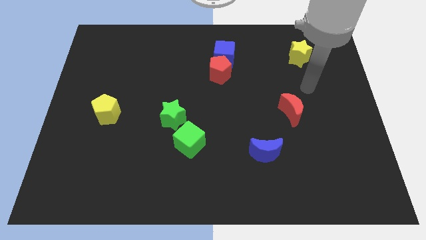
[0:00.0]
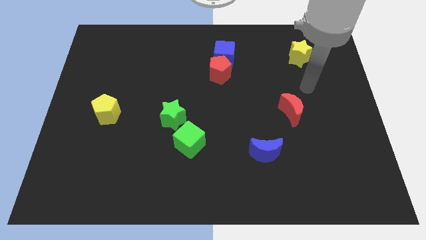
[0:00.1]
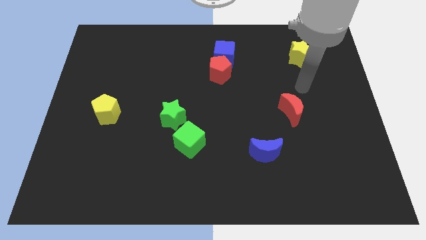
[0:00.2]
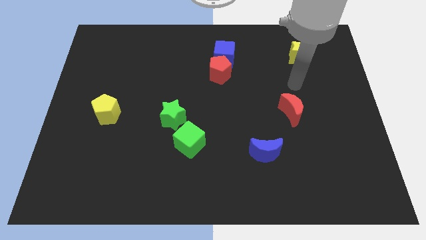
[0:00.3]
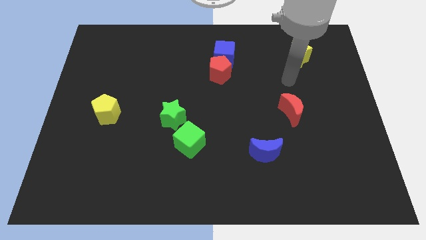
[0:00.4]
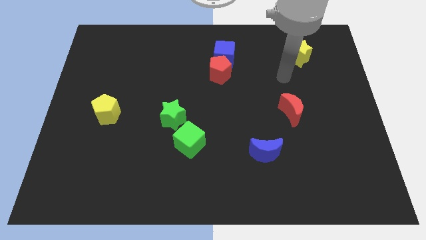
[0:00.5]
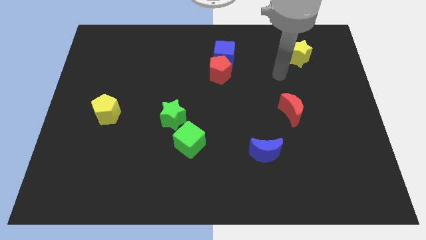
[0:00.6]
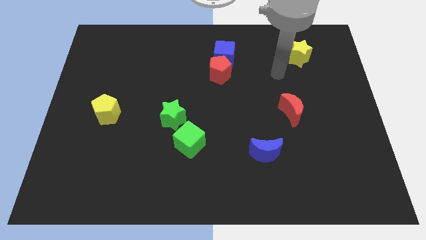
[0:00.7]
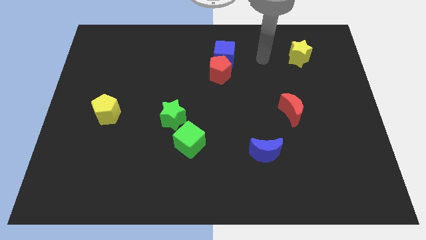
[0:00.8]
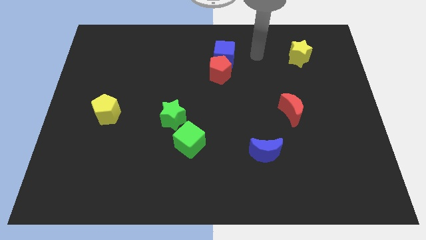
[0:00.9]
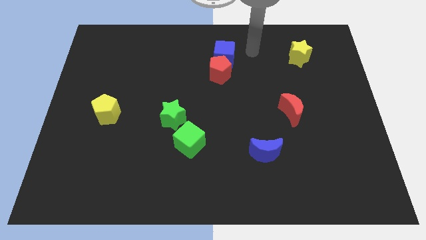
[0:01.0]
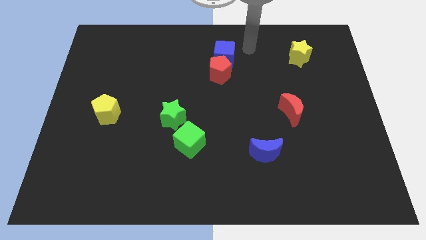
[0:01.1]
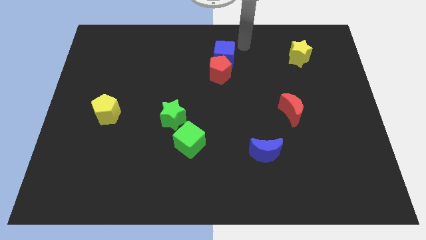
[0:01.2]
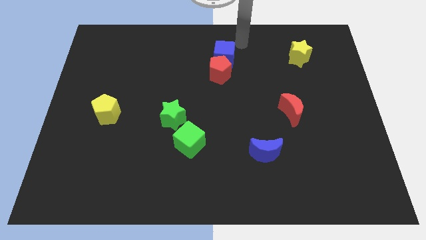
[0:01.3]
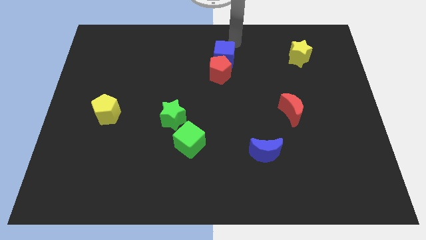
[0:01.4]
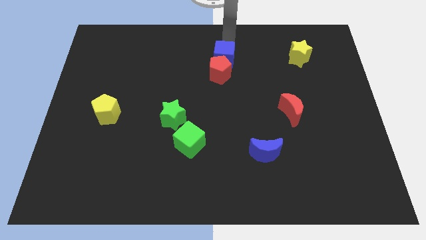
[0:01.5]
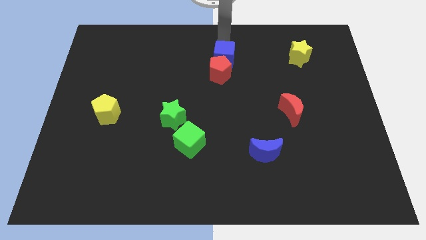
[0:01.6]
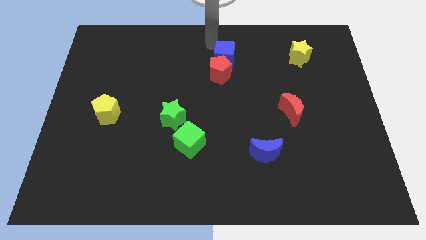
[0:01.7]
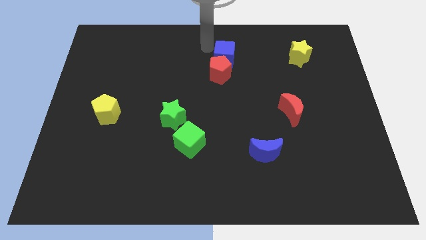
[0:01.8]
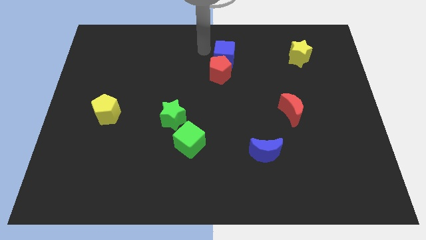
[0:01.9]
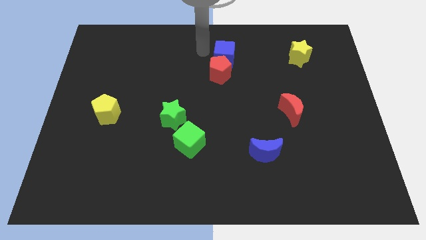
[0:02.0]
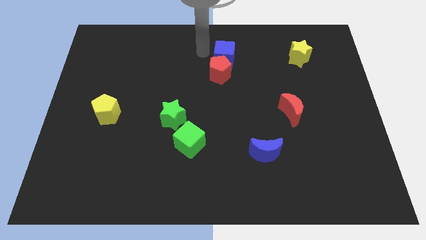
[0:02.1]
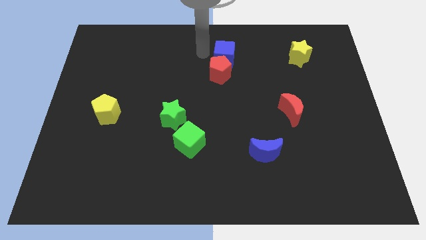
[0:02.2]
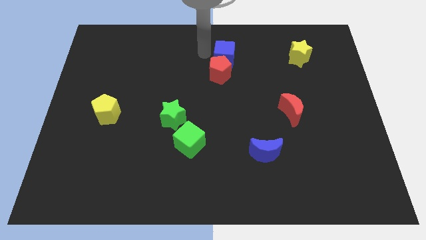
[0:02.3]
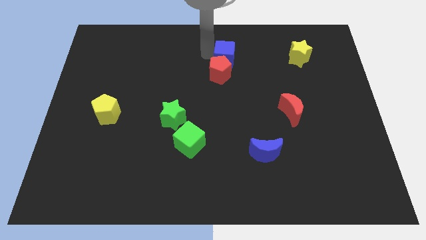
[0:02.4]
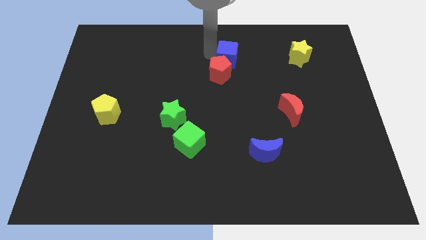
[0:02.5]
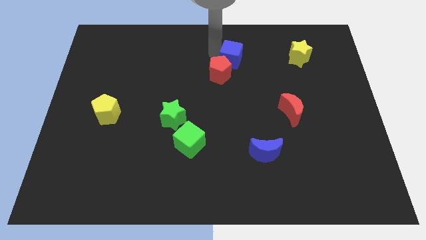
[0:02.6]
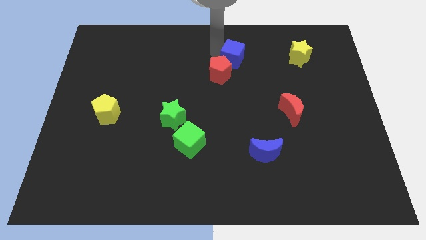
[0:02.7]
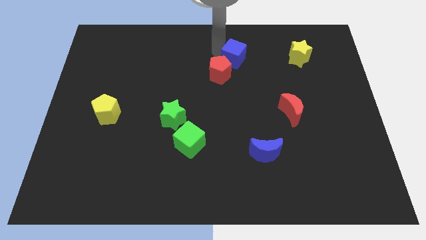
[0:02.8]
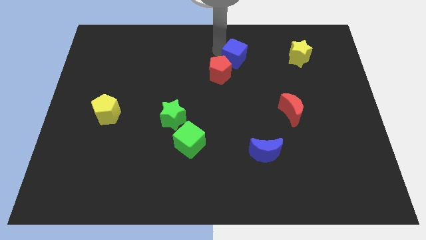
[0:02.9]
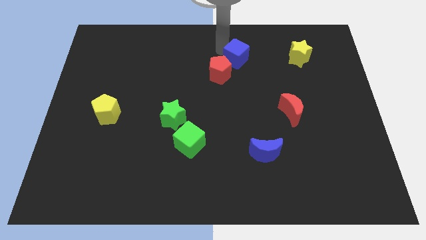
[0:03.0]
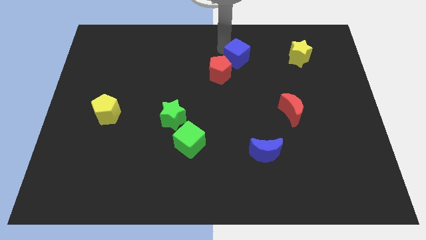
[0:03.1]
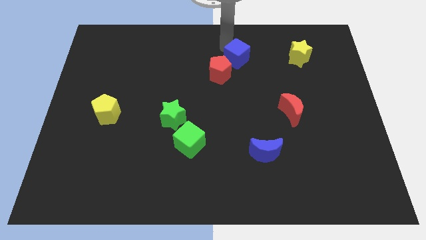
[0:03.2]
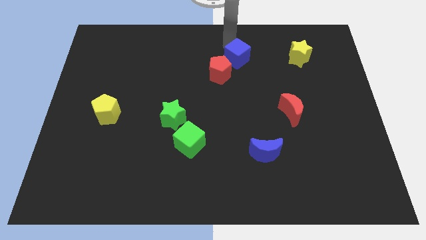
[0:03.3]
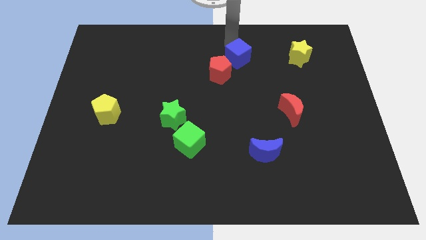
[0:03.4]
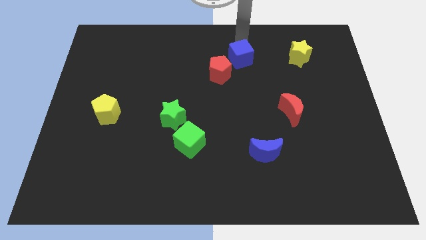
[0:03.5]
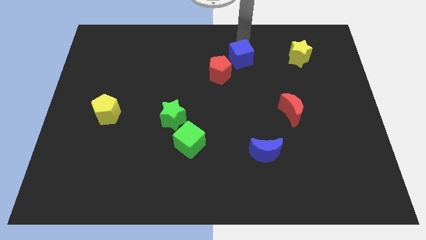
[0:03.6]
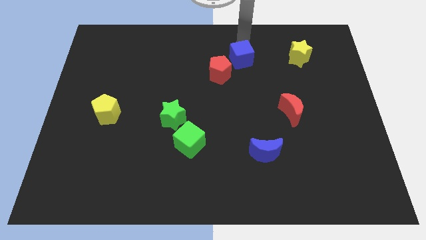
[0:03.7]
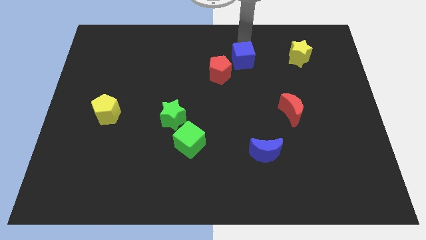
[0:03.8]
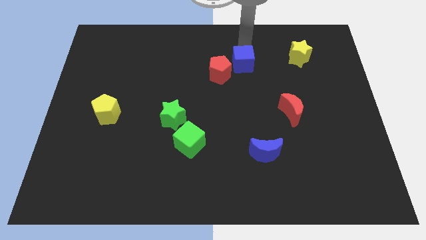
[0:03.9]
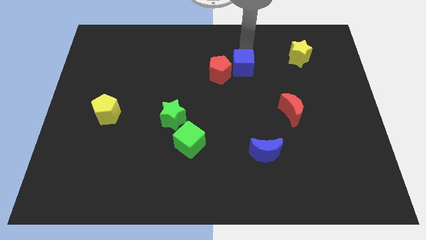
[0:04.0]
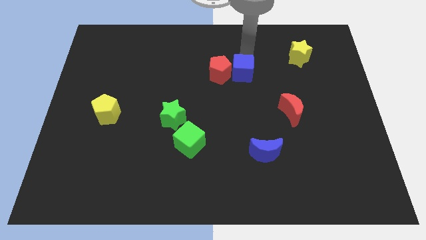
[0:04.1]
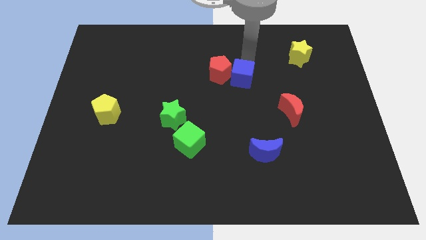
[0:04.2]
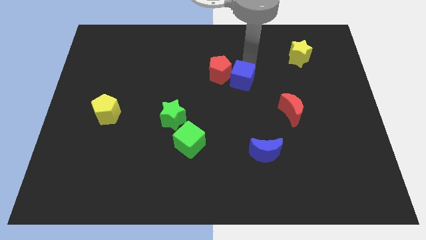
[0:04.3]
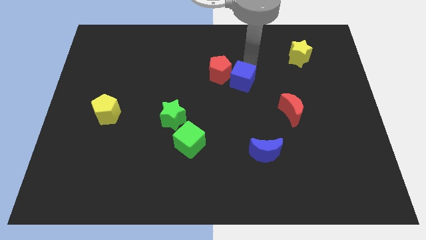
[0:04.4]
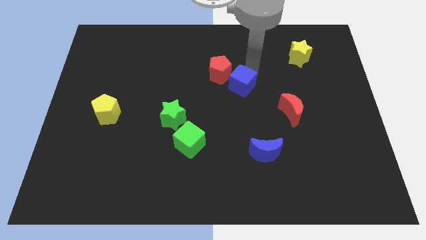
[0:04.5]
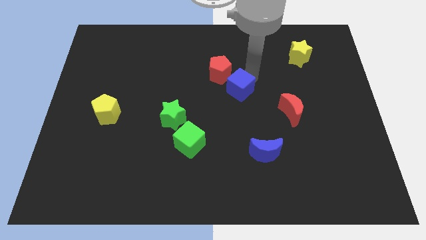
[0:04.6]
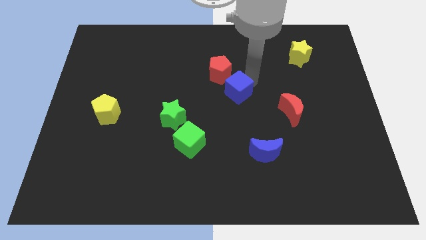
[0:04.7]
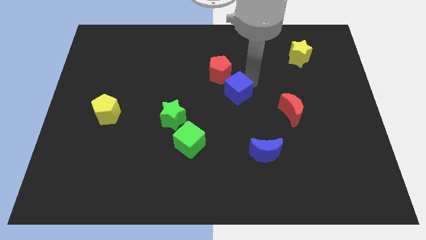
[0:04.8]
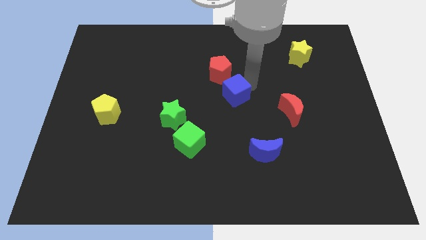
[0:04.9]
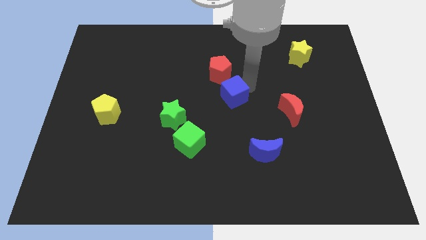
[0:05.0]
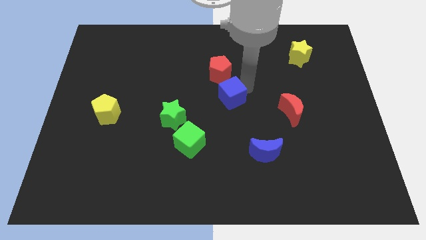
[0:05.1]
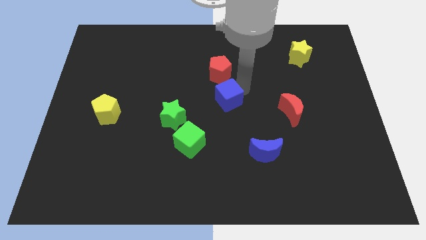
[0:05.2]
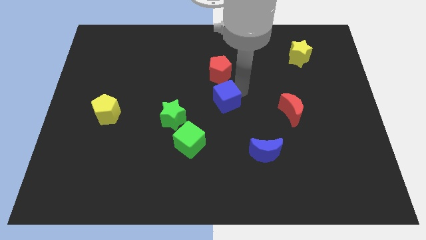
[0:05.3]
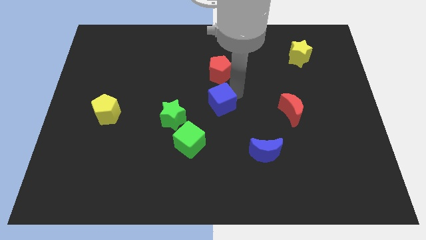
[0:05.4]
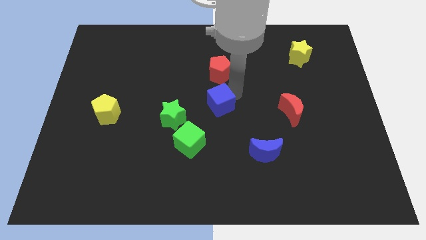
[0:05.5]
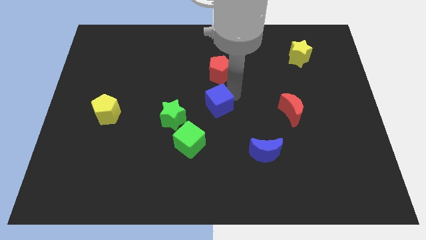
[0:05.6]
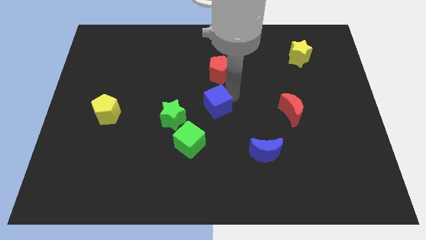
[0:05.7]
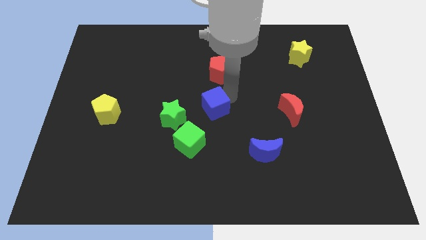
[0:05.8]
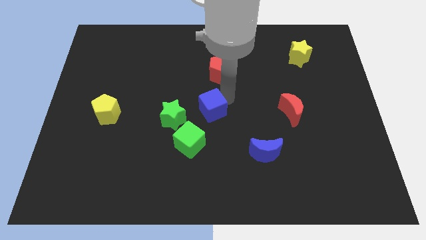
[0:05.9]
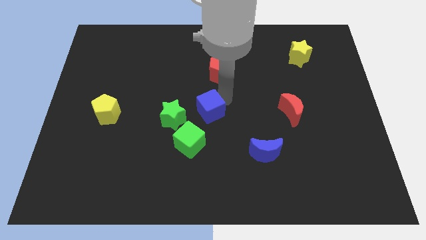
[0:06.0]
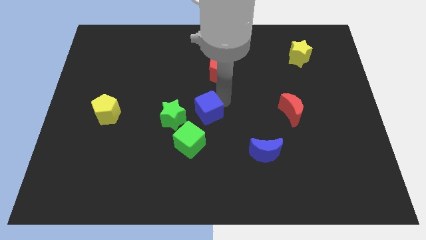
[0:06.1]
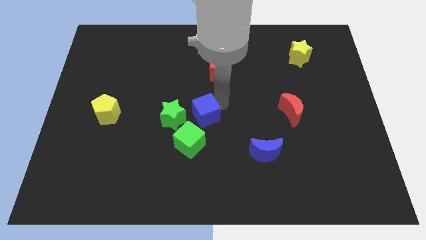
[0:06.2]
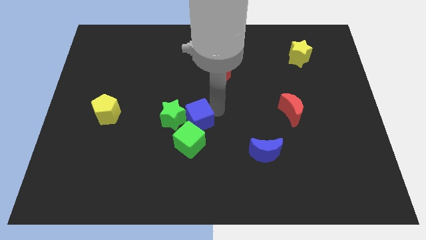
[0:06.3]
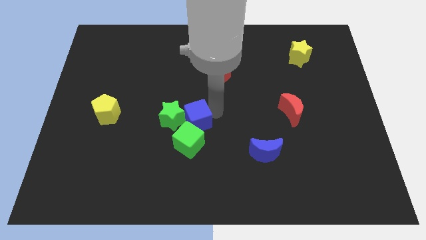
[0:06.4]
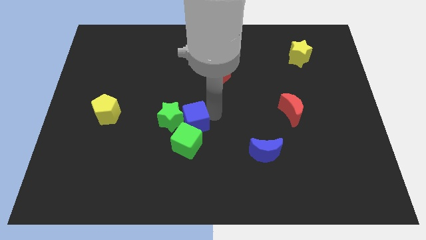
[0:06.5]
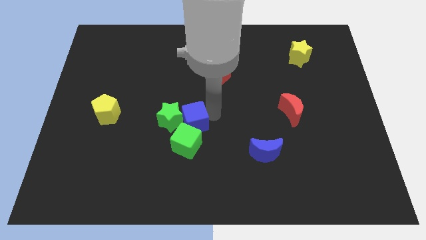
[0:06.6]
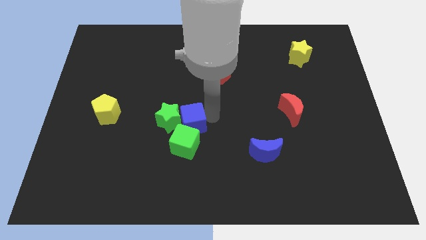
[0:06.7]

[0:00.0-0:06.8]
put the blue cube to the green cube

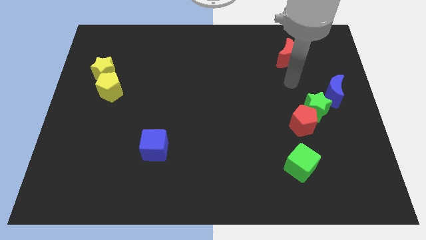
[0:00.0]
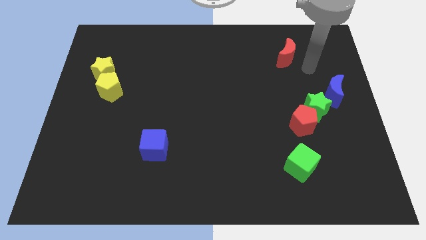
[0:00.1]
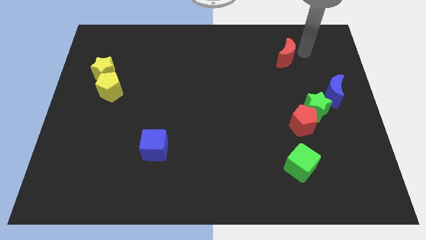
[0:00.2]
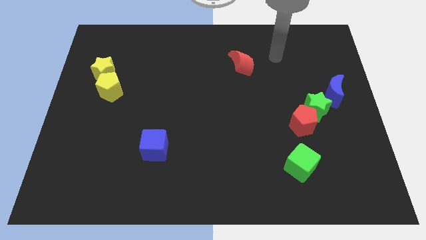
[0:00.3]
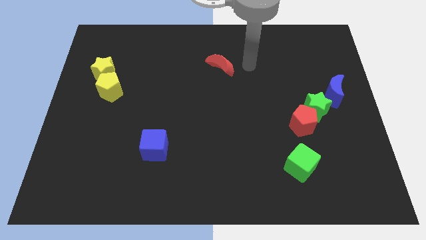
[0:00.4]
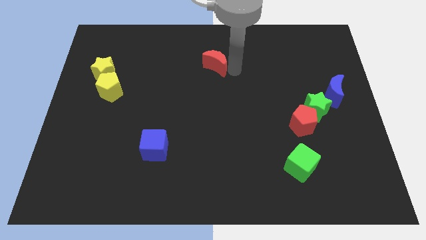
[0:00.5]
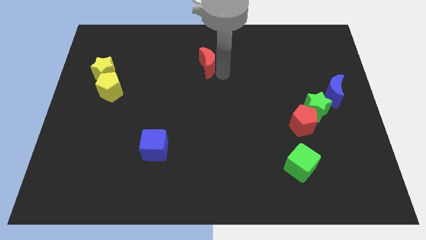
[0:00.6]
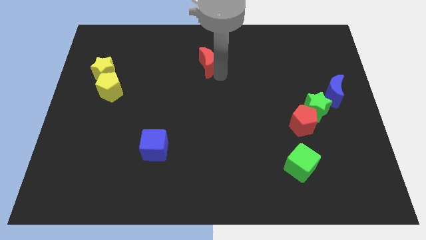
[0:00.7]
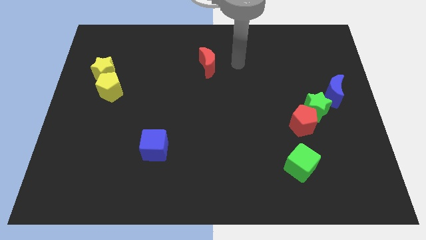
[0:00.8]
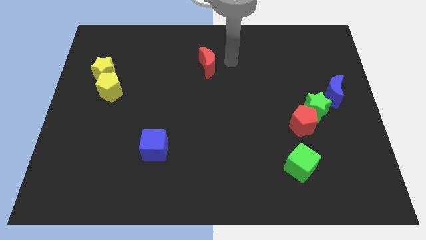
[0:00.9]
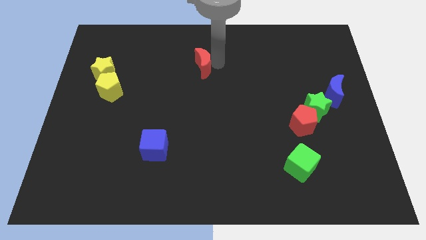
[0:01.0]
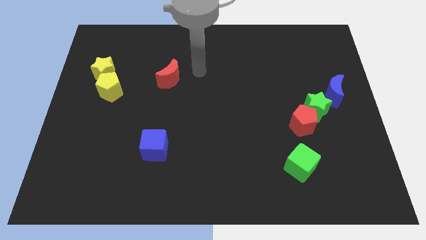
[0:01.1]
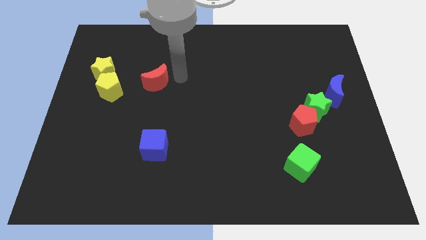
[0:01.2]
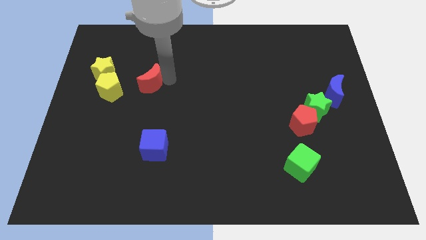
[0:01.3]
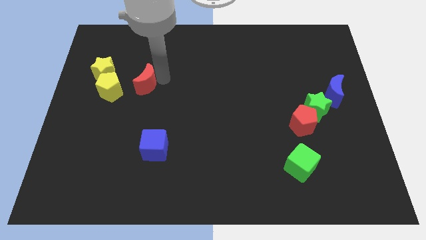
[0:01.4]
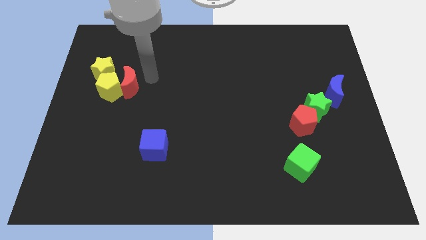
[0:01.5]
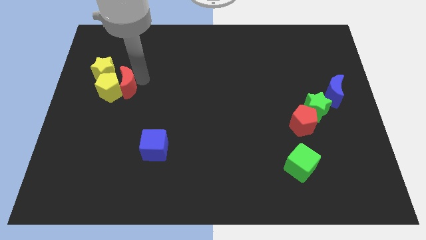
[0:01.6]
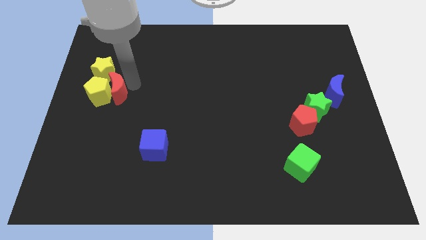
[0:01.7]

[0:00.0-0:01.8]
push the red moon to the yellow pentagon
